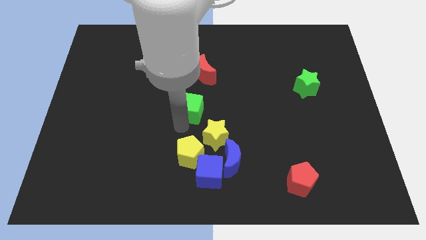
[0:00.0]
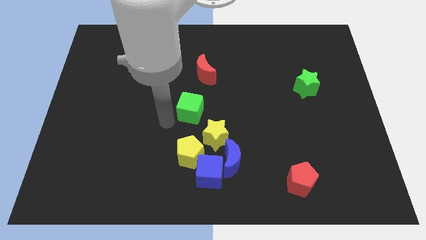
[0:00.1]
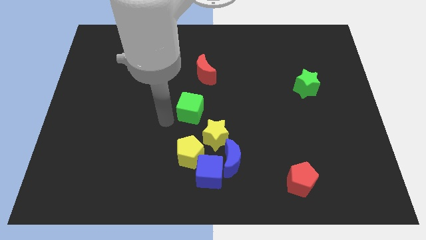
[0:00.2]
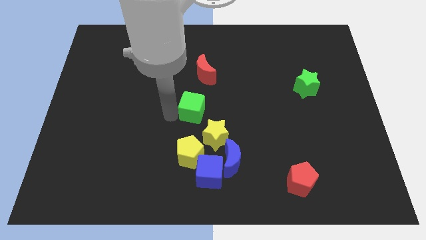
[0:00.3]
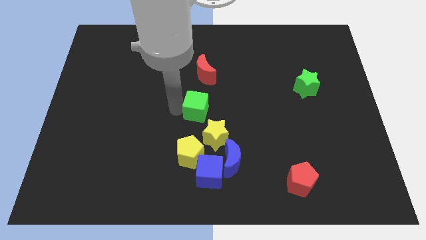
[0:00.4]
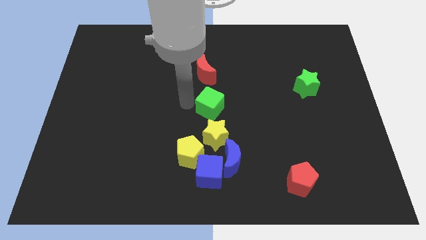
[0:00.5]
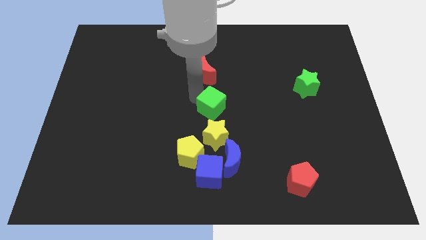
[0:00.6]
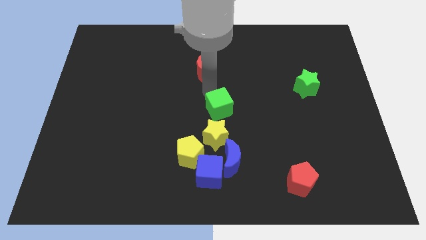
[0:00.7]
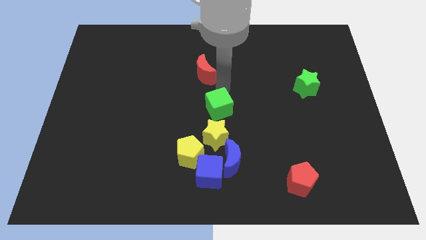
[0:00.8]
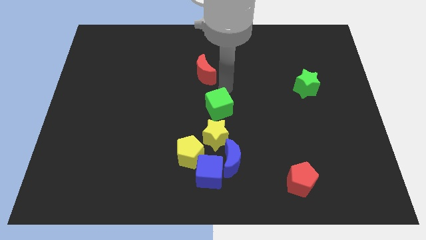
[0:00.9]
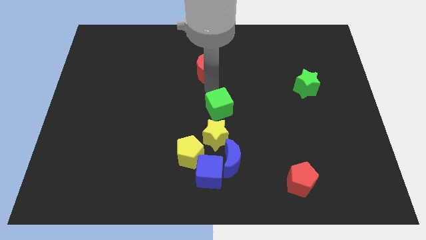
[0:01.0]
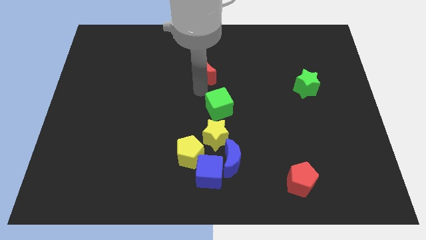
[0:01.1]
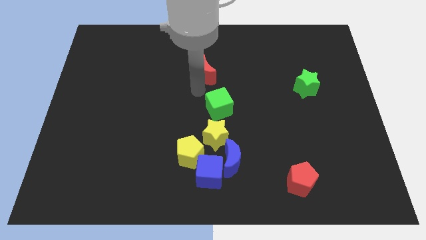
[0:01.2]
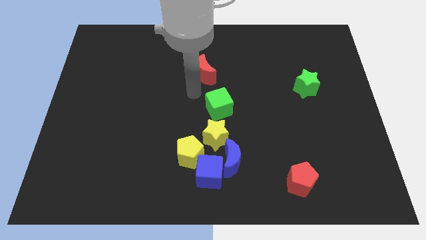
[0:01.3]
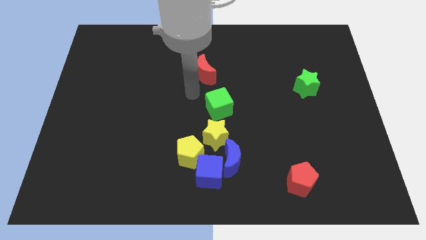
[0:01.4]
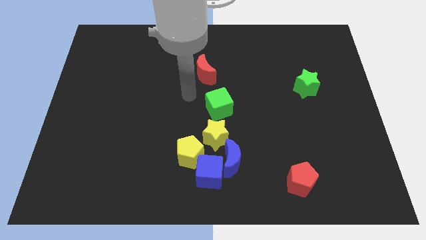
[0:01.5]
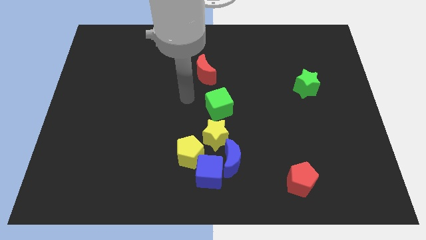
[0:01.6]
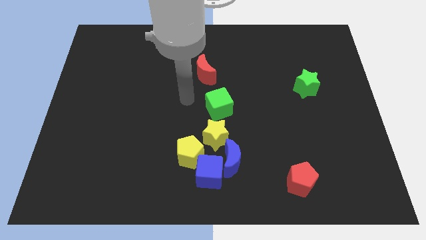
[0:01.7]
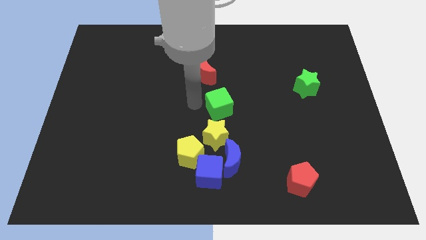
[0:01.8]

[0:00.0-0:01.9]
place the green cube above the yellow star

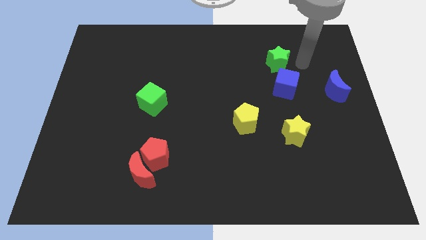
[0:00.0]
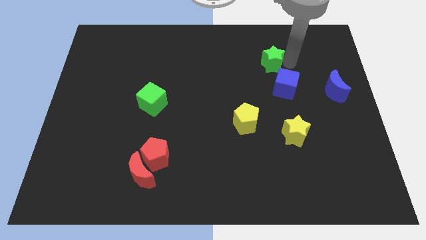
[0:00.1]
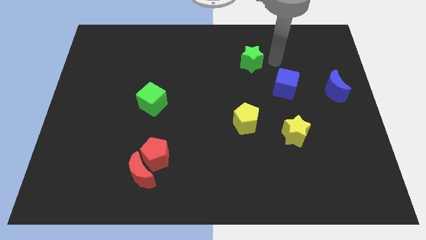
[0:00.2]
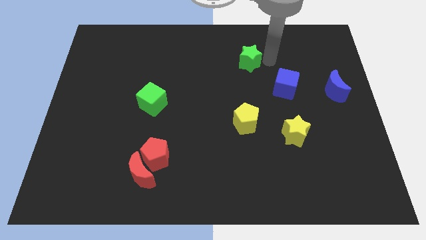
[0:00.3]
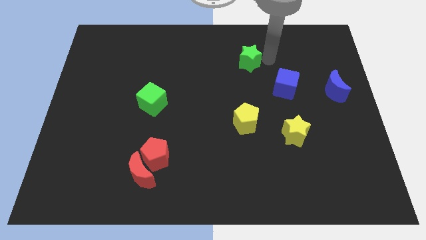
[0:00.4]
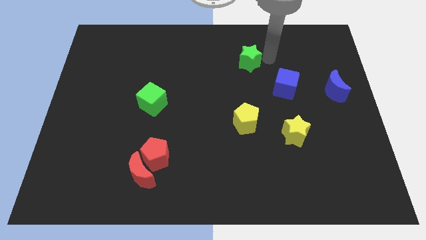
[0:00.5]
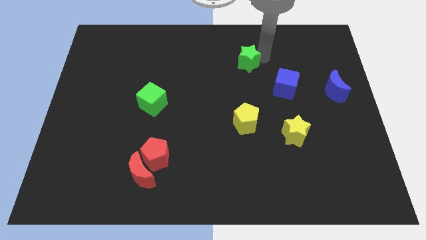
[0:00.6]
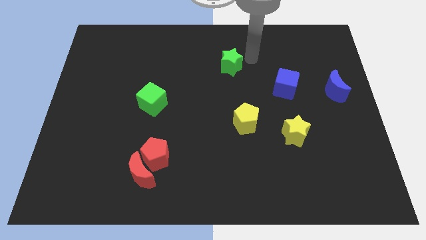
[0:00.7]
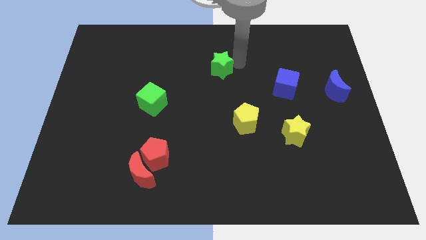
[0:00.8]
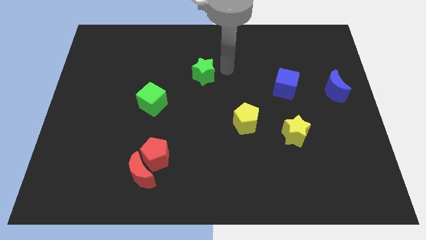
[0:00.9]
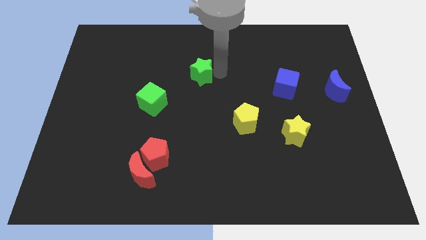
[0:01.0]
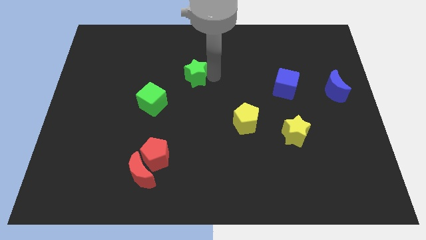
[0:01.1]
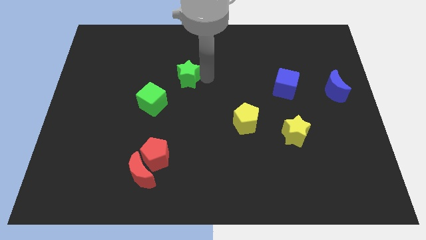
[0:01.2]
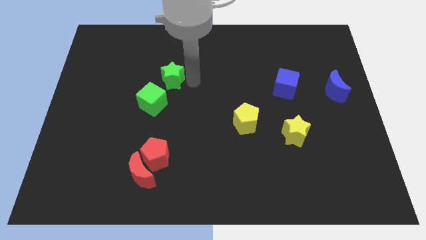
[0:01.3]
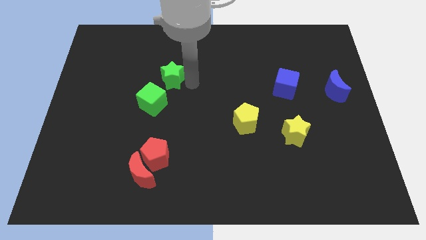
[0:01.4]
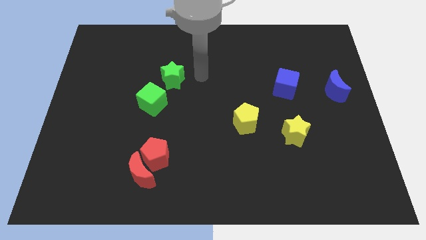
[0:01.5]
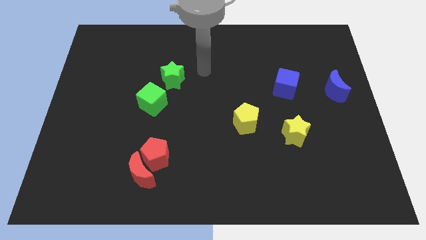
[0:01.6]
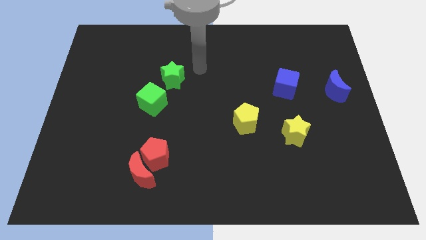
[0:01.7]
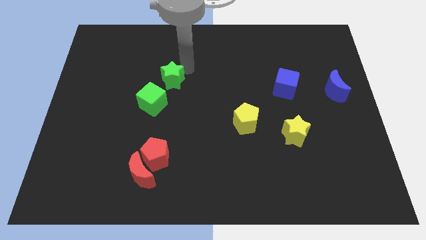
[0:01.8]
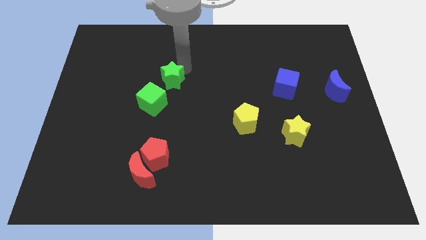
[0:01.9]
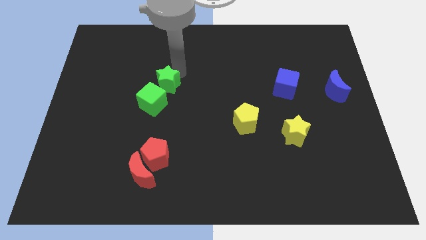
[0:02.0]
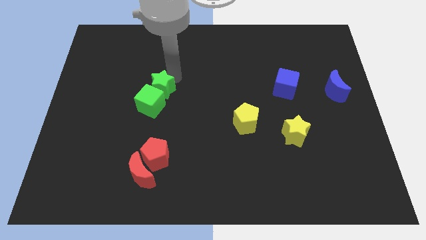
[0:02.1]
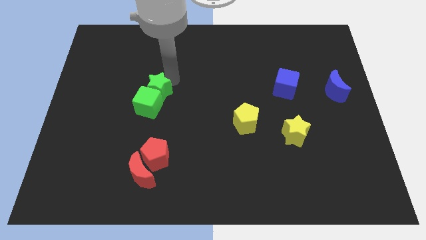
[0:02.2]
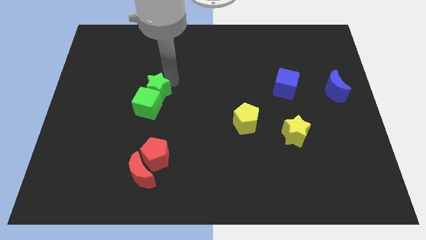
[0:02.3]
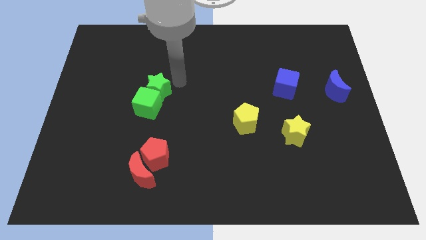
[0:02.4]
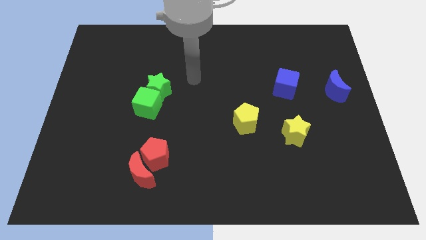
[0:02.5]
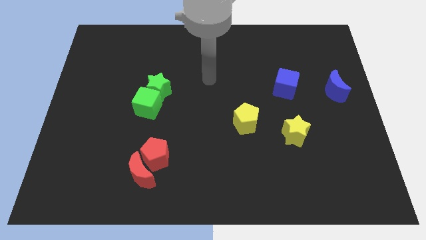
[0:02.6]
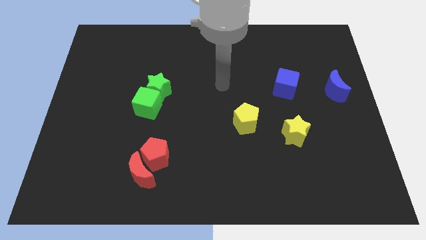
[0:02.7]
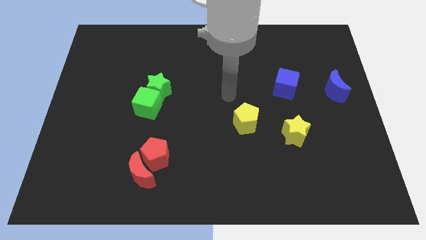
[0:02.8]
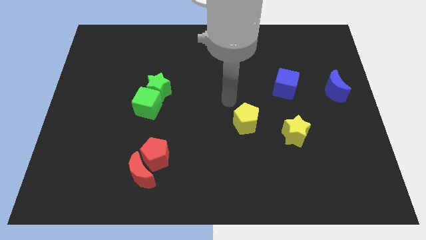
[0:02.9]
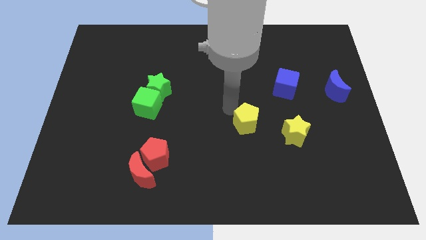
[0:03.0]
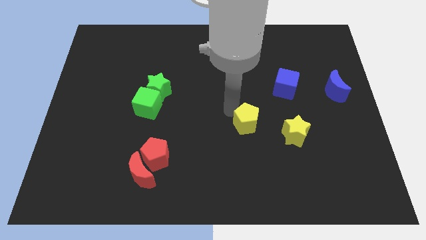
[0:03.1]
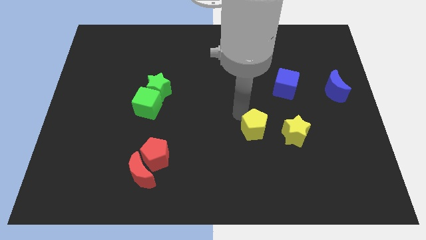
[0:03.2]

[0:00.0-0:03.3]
push the green star into the green cube

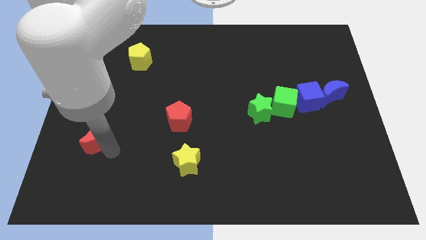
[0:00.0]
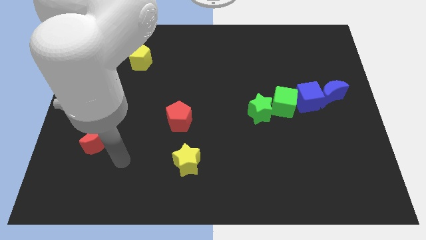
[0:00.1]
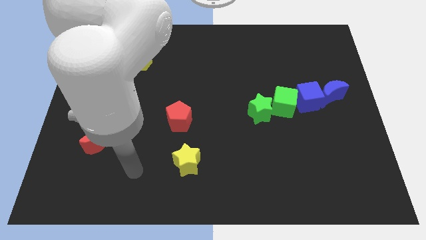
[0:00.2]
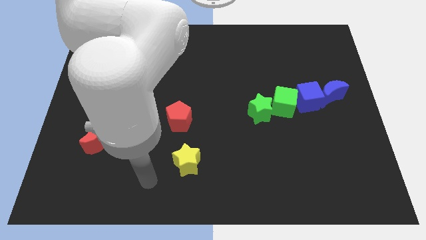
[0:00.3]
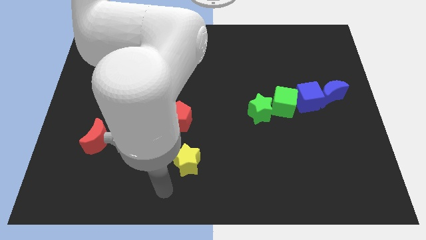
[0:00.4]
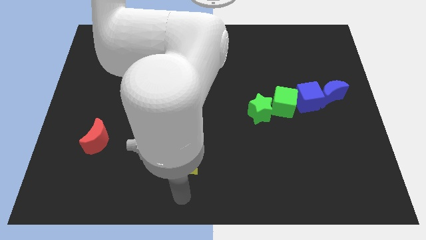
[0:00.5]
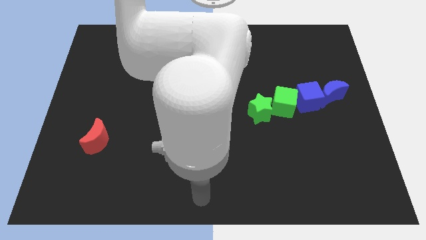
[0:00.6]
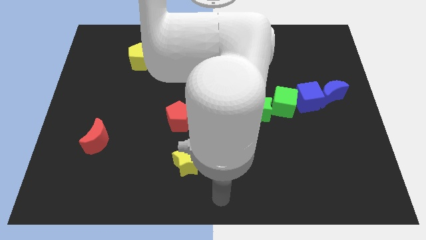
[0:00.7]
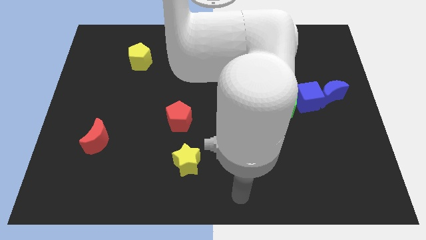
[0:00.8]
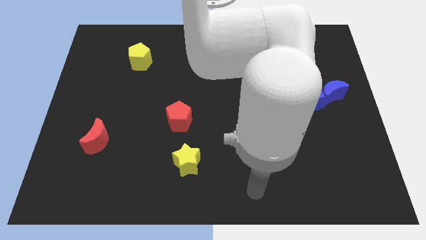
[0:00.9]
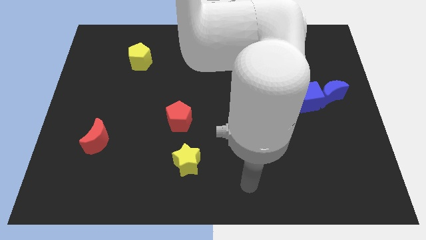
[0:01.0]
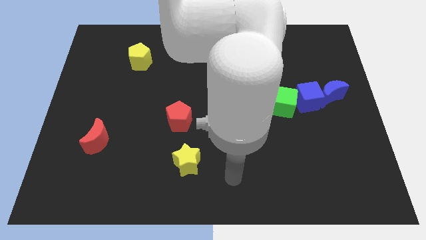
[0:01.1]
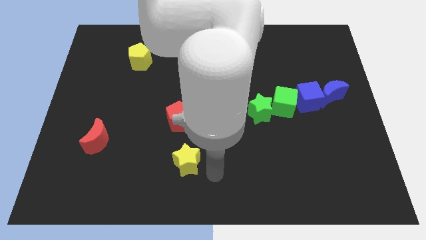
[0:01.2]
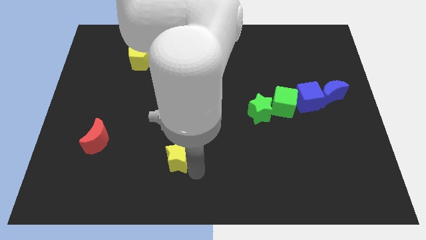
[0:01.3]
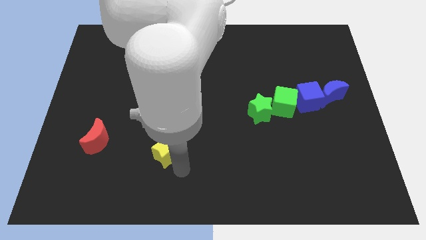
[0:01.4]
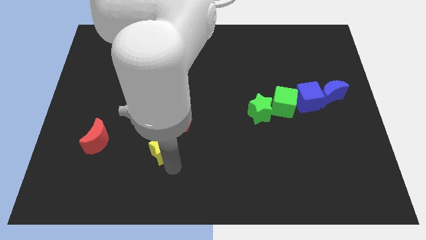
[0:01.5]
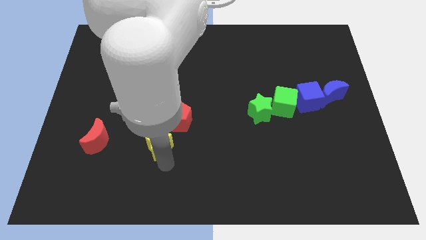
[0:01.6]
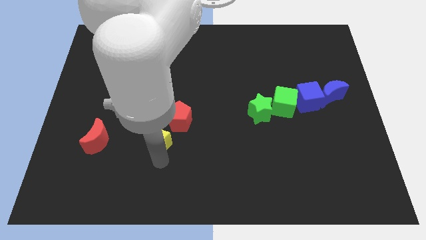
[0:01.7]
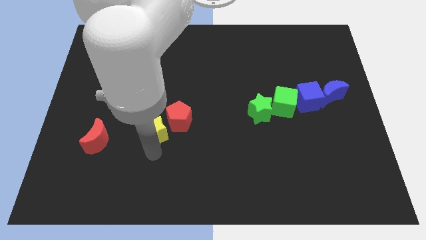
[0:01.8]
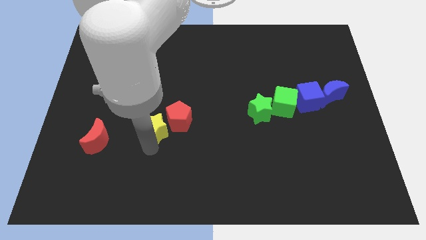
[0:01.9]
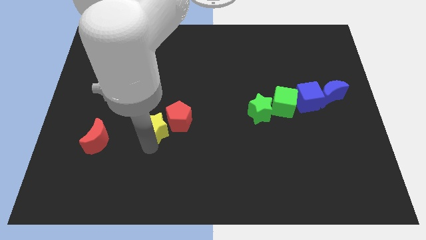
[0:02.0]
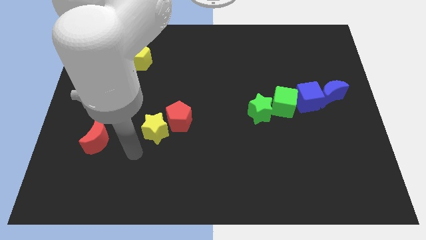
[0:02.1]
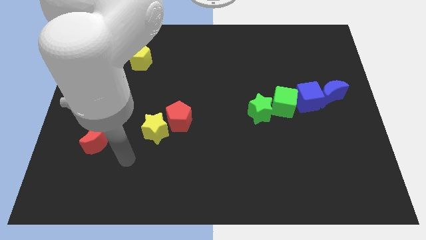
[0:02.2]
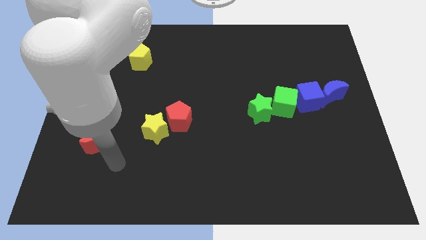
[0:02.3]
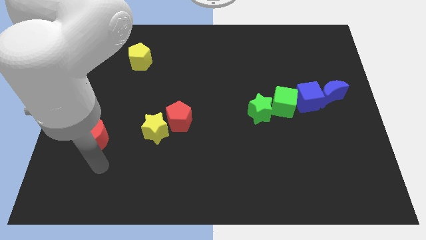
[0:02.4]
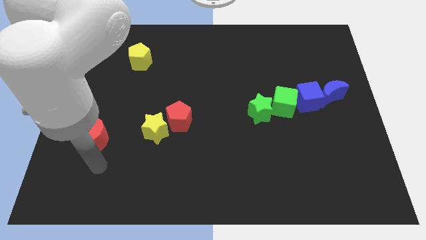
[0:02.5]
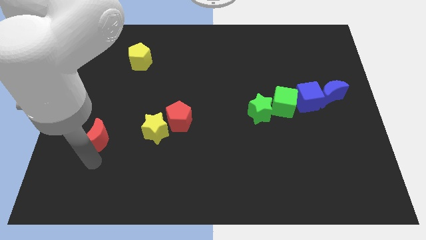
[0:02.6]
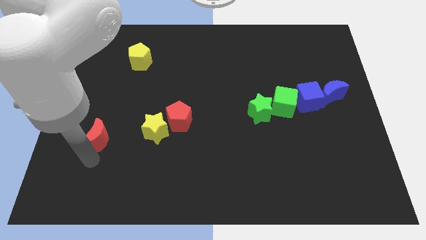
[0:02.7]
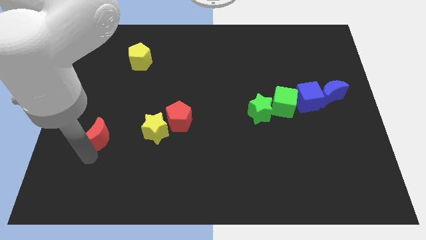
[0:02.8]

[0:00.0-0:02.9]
move the yellow star to the left of the red pentagon

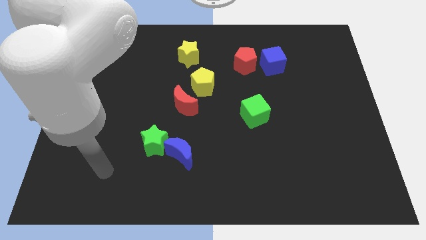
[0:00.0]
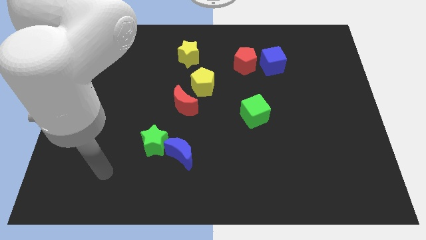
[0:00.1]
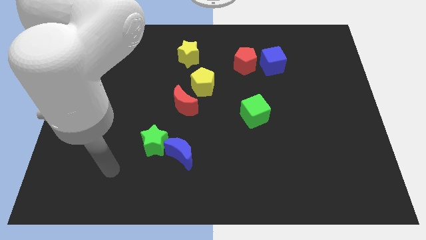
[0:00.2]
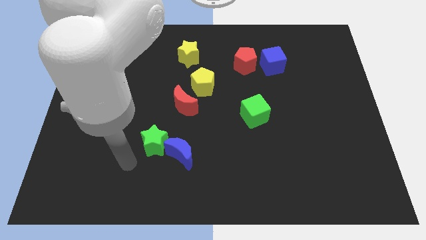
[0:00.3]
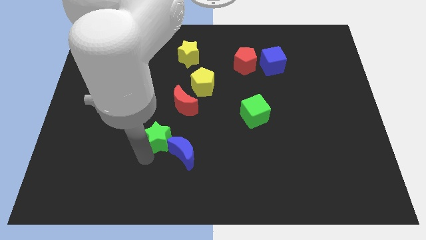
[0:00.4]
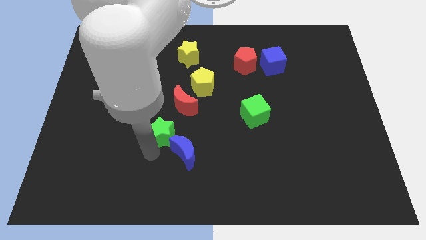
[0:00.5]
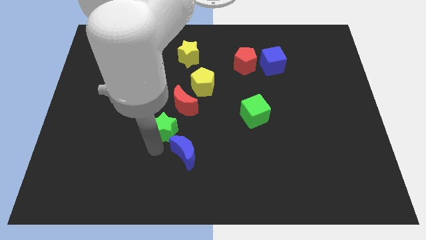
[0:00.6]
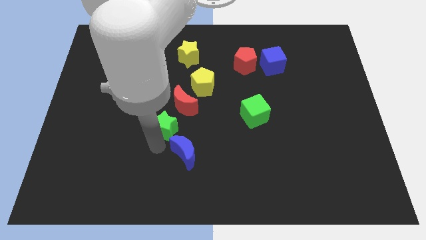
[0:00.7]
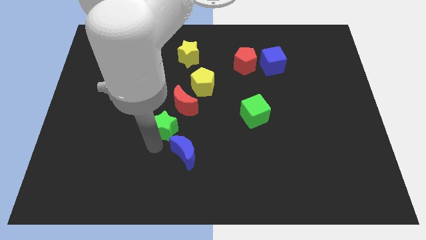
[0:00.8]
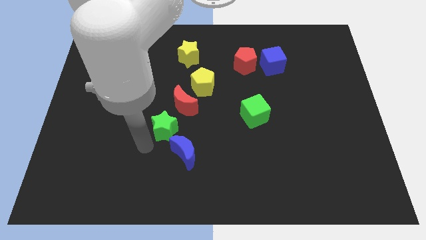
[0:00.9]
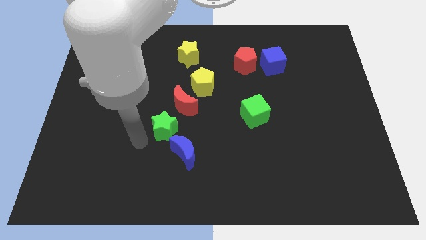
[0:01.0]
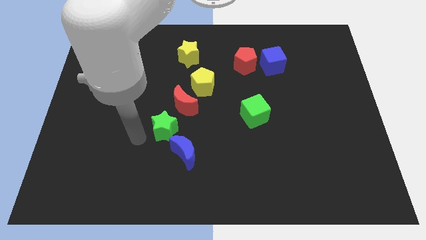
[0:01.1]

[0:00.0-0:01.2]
push the green star towards the red moon
